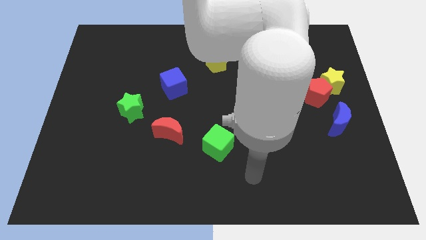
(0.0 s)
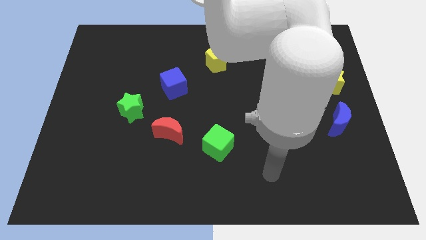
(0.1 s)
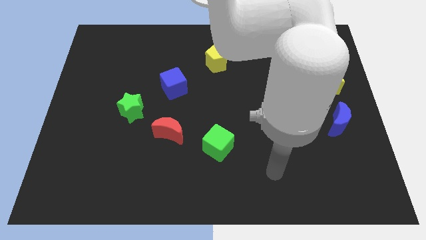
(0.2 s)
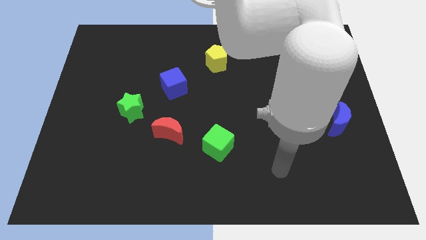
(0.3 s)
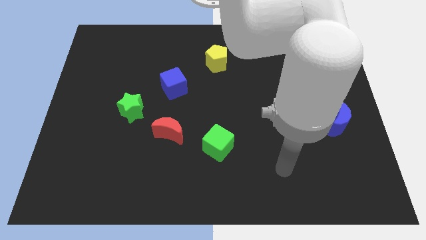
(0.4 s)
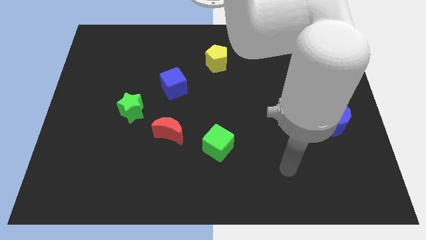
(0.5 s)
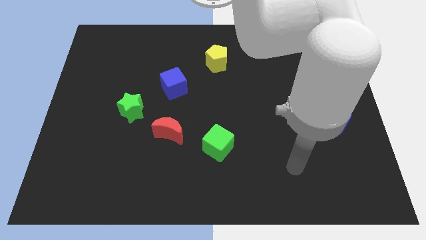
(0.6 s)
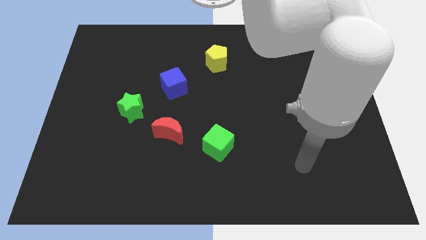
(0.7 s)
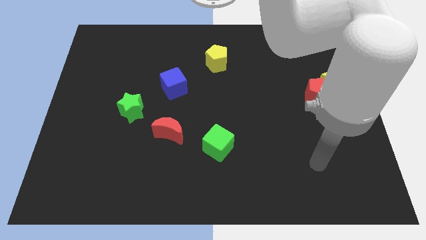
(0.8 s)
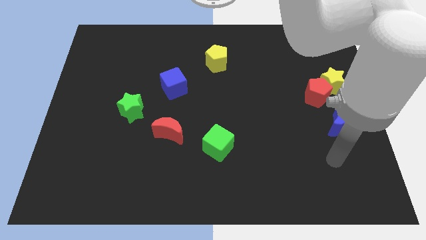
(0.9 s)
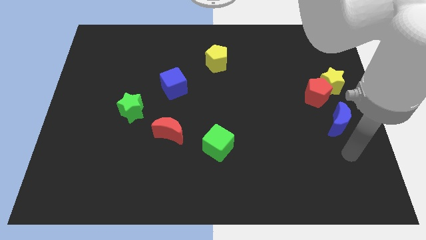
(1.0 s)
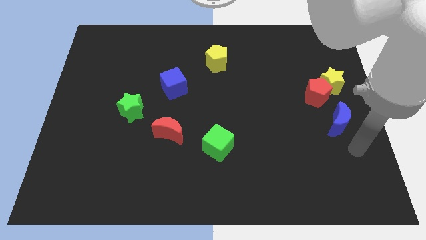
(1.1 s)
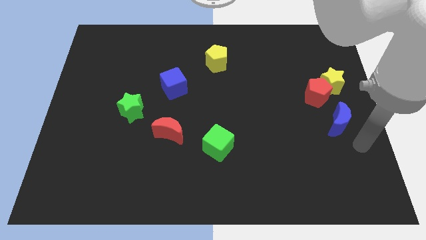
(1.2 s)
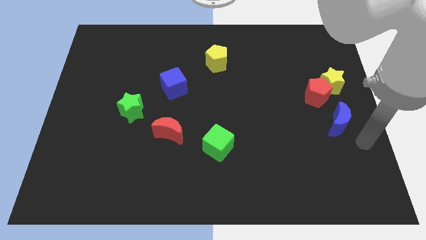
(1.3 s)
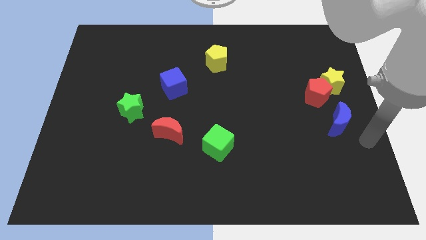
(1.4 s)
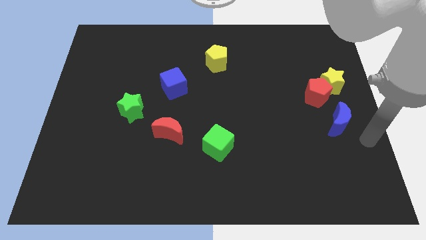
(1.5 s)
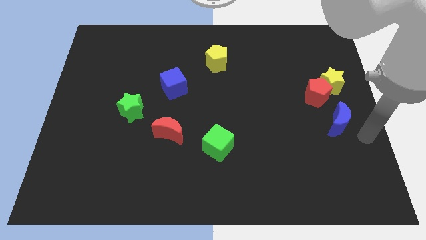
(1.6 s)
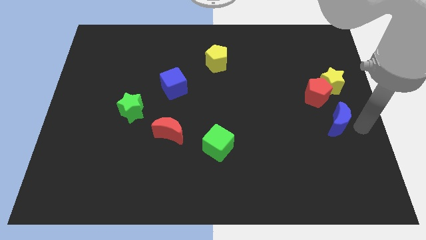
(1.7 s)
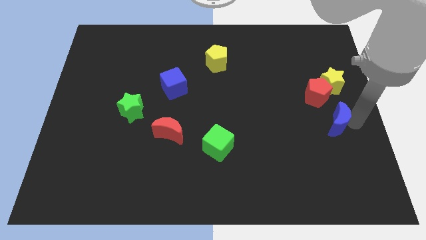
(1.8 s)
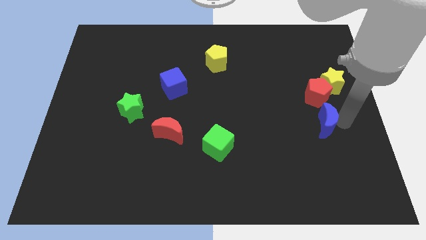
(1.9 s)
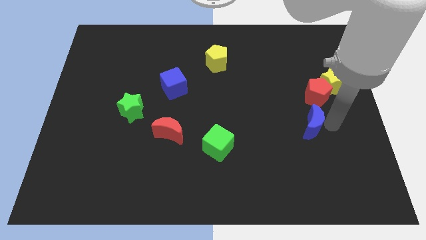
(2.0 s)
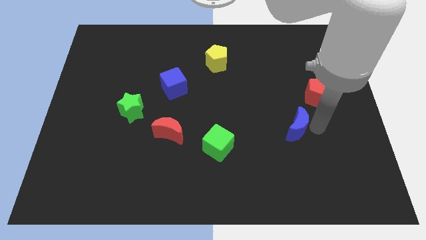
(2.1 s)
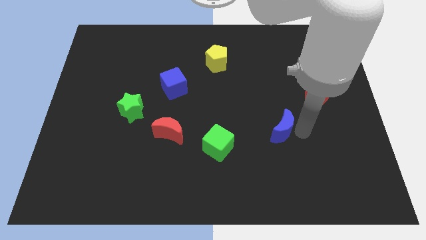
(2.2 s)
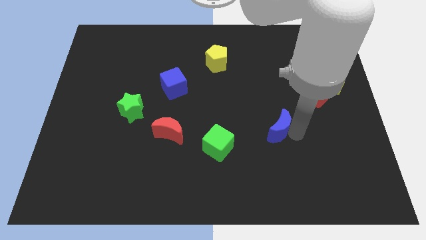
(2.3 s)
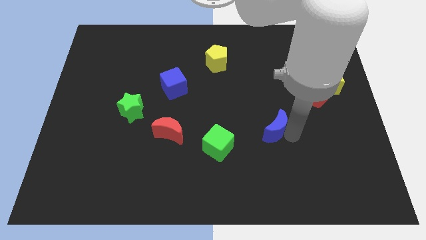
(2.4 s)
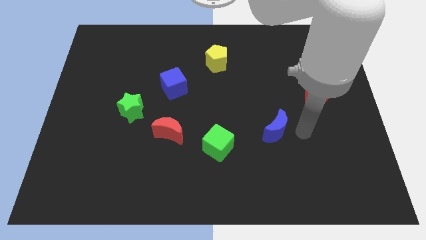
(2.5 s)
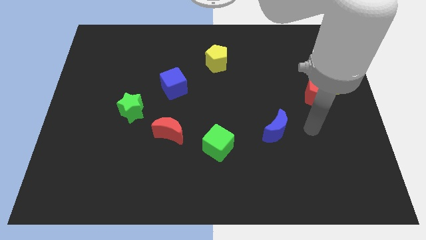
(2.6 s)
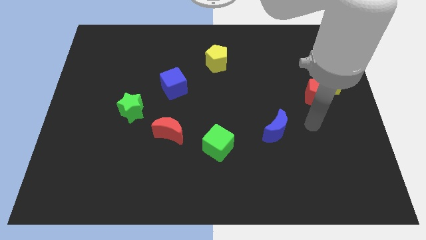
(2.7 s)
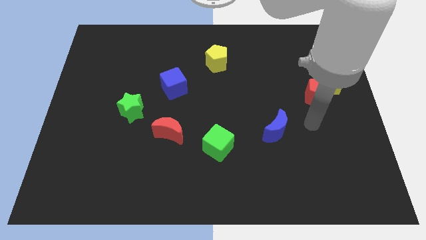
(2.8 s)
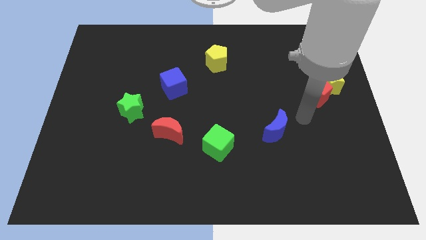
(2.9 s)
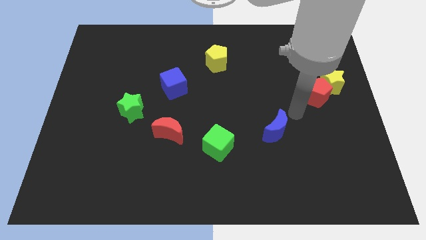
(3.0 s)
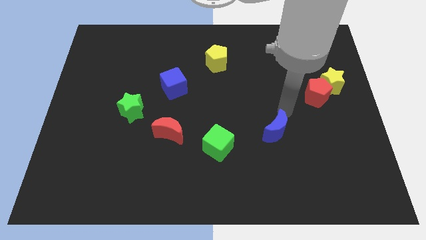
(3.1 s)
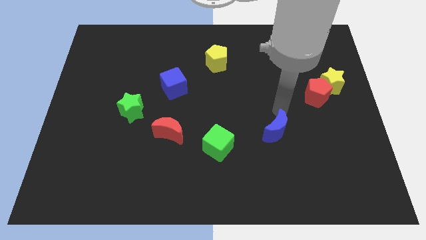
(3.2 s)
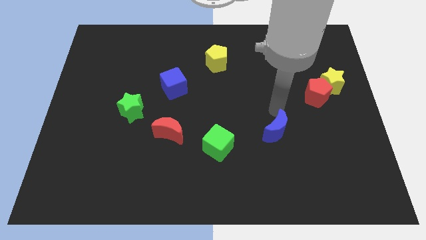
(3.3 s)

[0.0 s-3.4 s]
move the blue moon towards the green cube

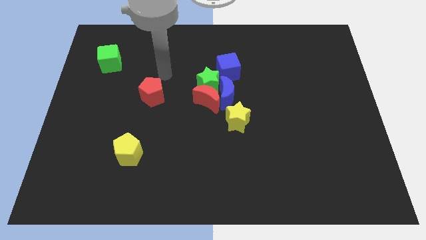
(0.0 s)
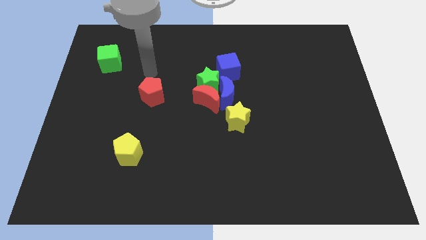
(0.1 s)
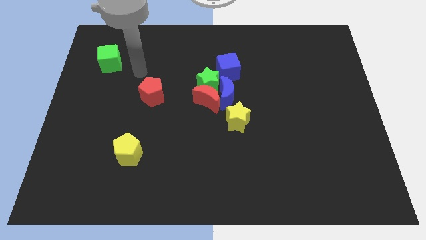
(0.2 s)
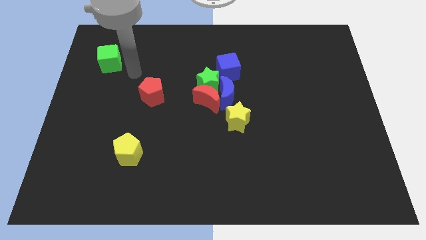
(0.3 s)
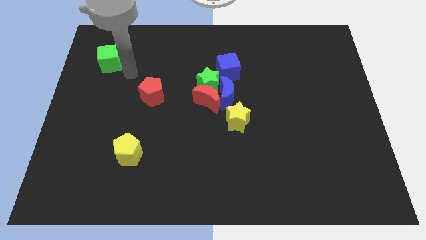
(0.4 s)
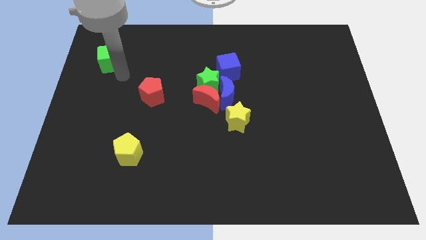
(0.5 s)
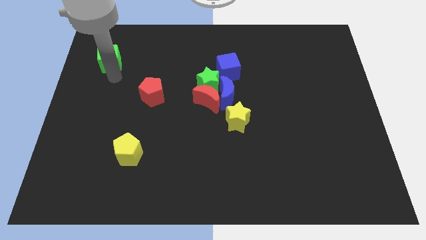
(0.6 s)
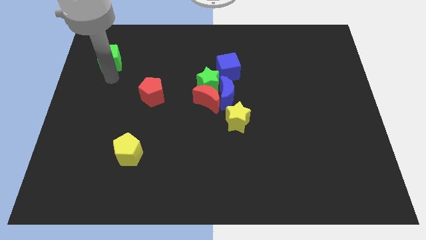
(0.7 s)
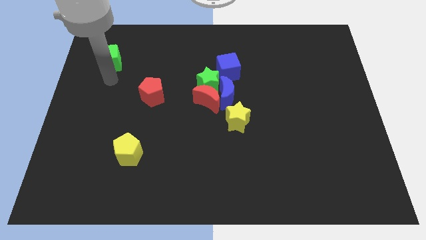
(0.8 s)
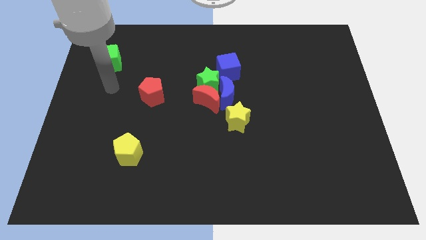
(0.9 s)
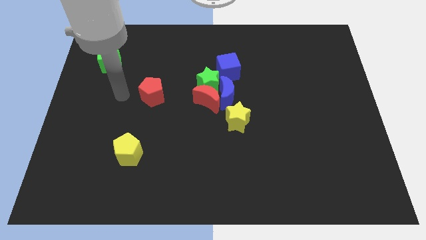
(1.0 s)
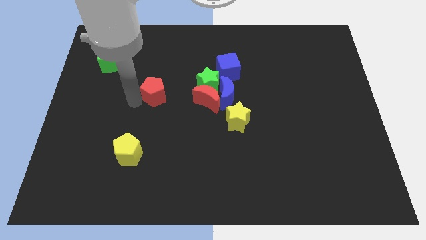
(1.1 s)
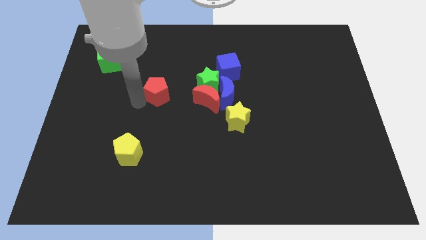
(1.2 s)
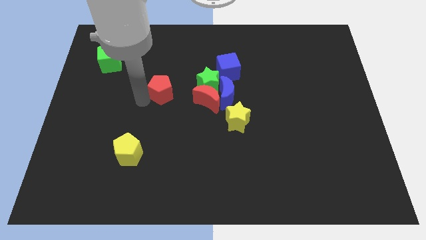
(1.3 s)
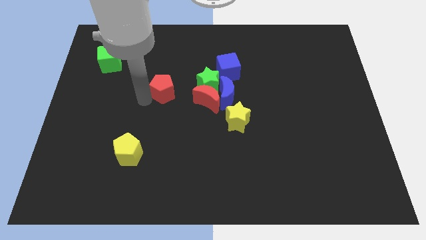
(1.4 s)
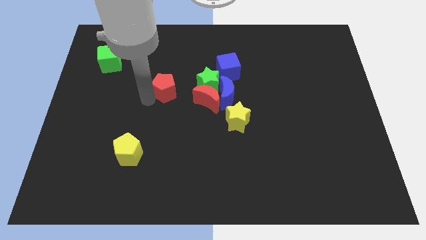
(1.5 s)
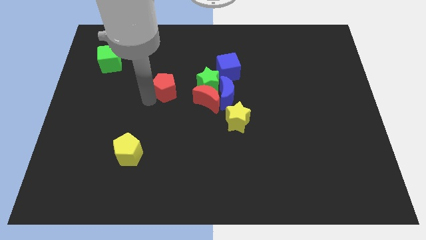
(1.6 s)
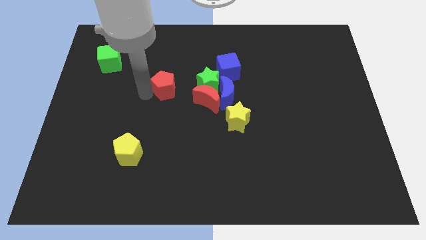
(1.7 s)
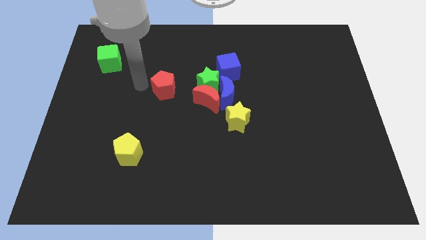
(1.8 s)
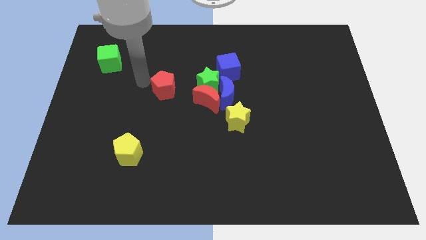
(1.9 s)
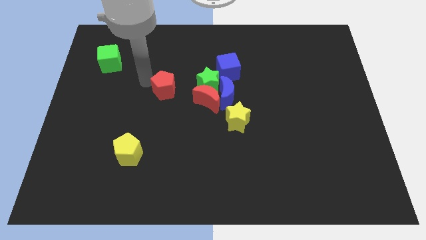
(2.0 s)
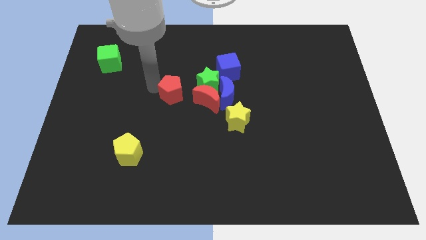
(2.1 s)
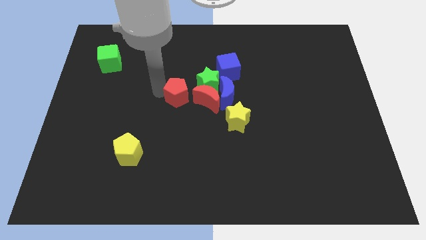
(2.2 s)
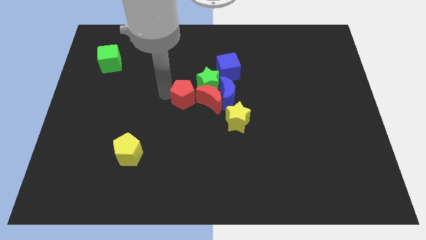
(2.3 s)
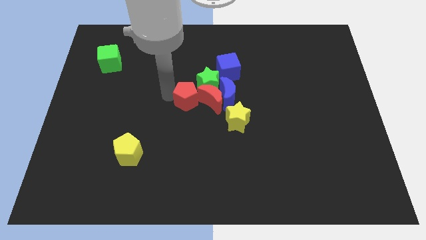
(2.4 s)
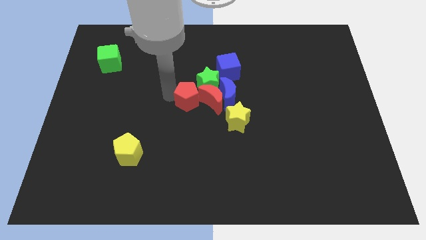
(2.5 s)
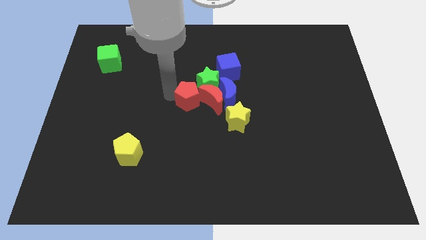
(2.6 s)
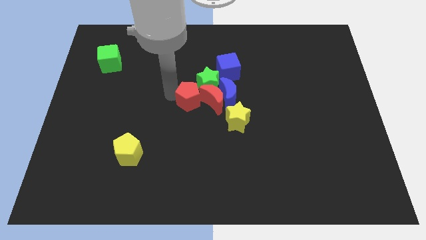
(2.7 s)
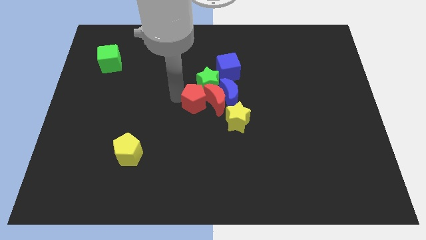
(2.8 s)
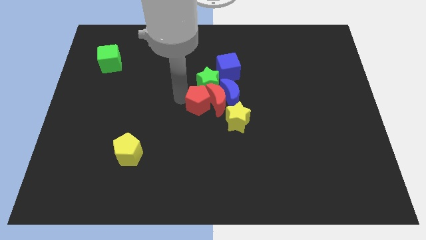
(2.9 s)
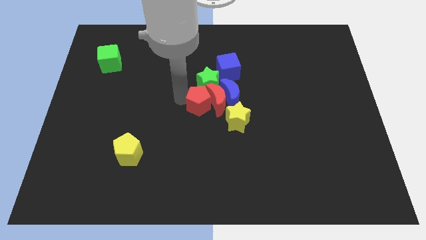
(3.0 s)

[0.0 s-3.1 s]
move the red pentagon into the red crescent

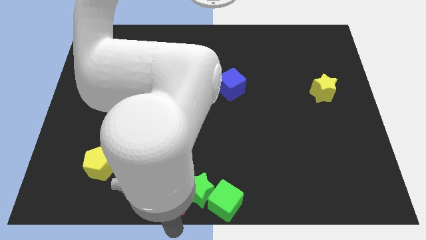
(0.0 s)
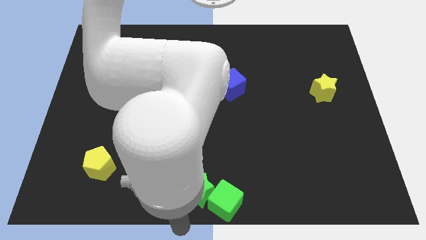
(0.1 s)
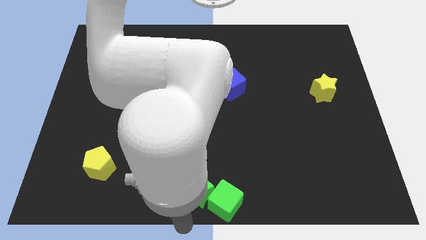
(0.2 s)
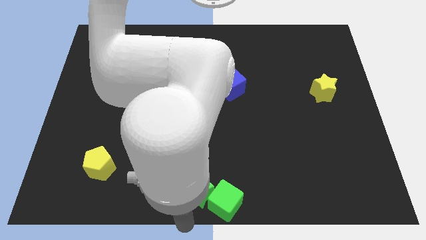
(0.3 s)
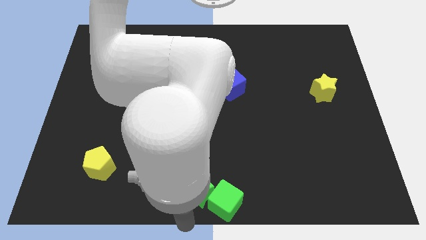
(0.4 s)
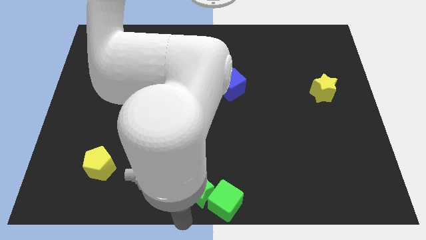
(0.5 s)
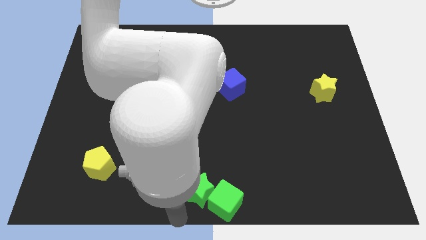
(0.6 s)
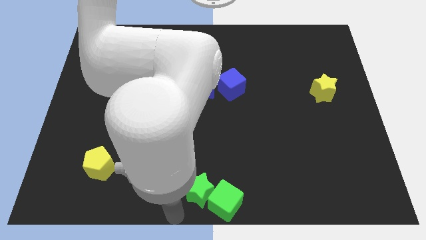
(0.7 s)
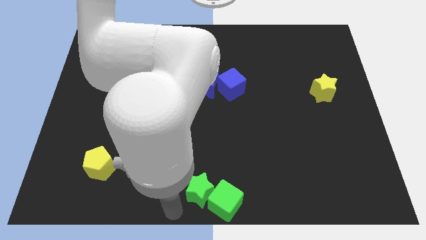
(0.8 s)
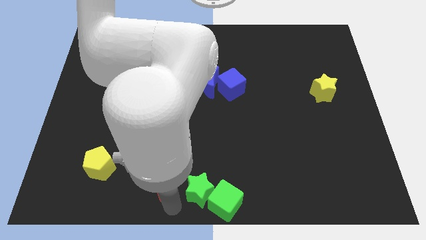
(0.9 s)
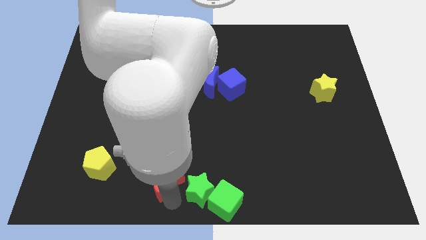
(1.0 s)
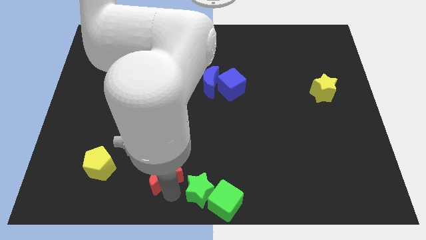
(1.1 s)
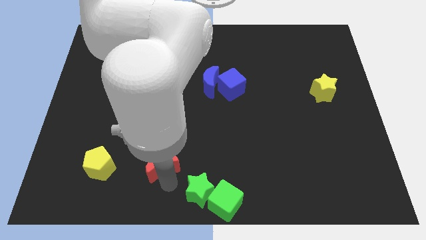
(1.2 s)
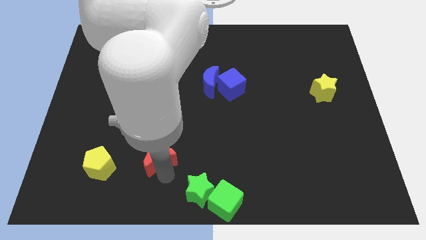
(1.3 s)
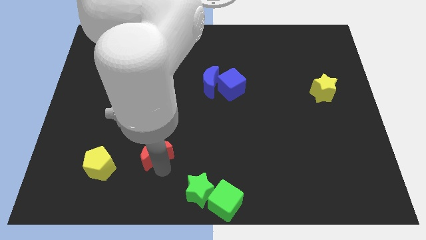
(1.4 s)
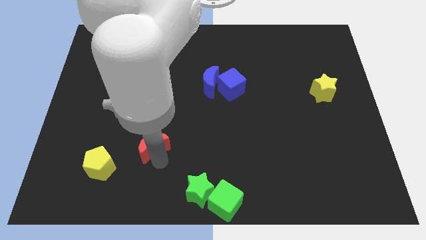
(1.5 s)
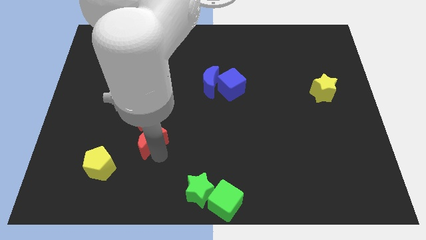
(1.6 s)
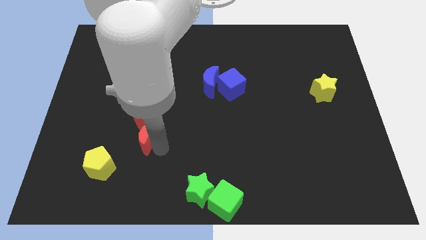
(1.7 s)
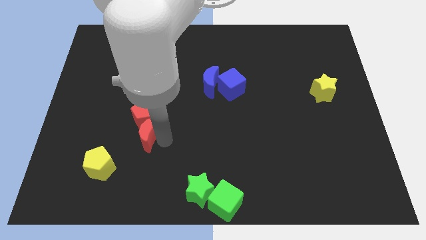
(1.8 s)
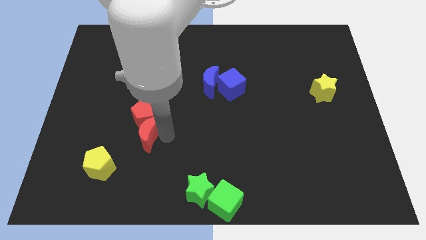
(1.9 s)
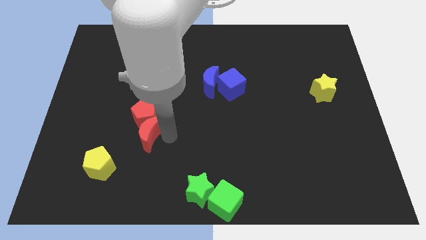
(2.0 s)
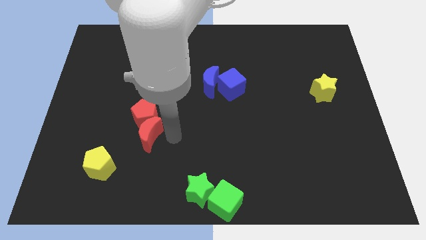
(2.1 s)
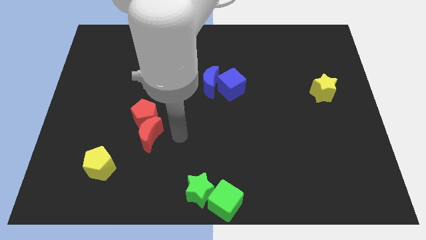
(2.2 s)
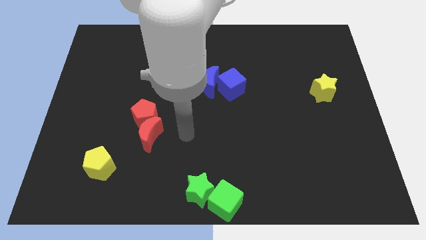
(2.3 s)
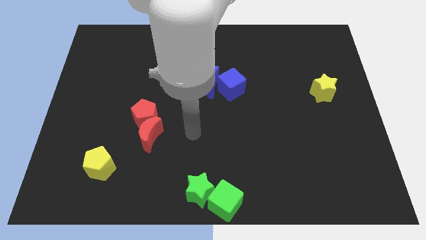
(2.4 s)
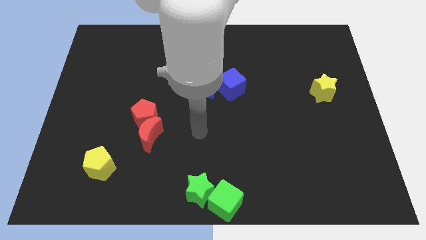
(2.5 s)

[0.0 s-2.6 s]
slide red moon to the bottom of the red pentagon
